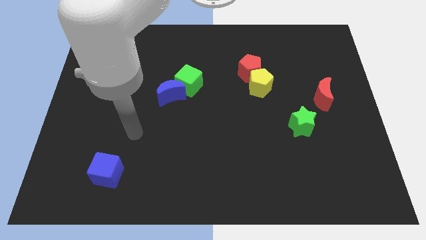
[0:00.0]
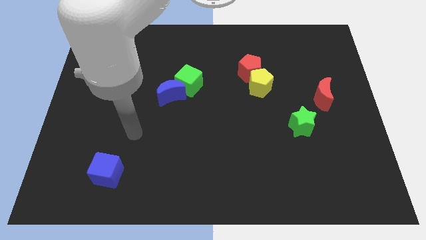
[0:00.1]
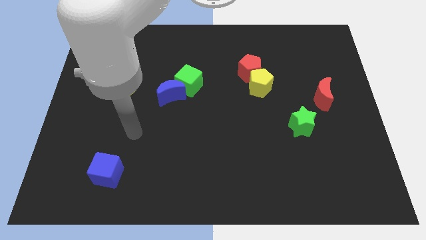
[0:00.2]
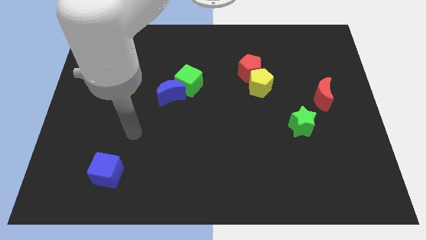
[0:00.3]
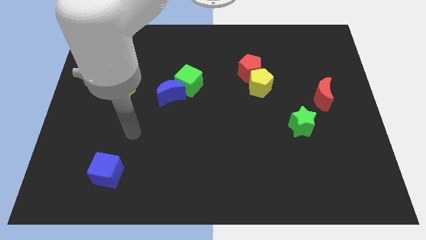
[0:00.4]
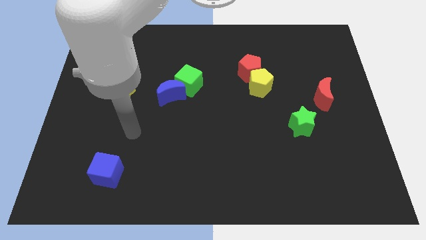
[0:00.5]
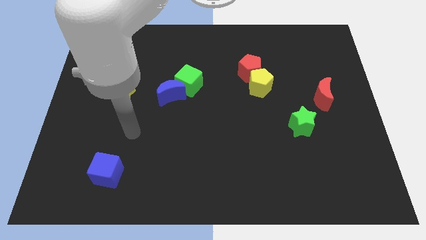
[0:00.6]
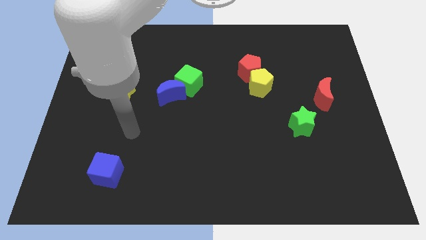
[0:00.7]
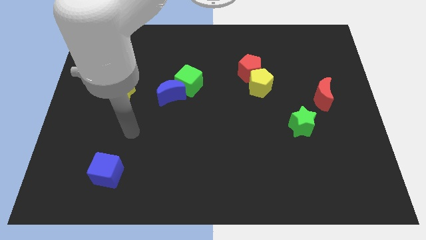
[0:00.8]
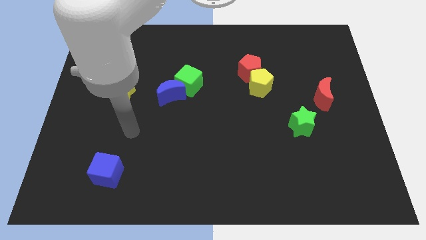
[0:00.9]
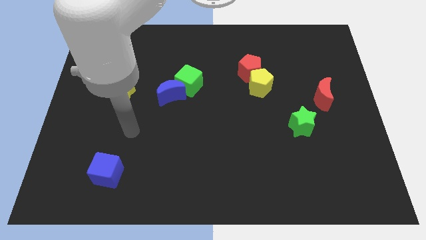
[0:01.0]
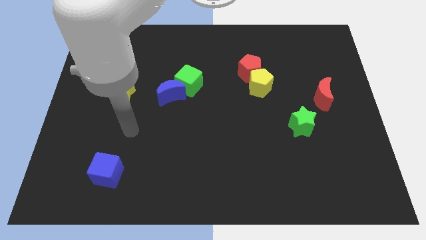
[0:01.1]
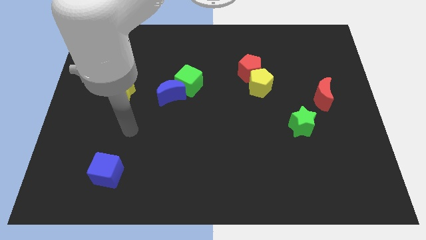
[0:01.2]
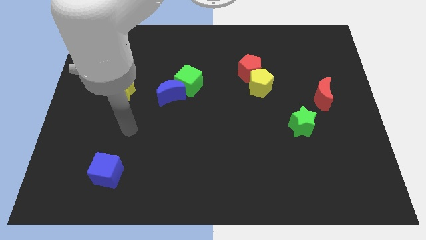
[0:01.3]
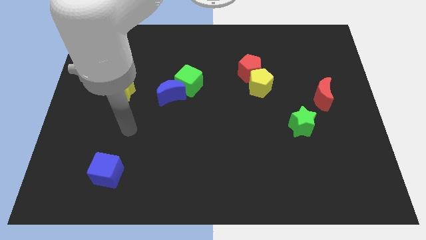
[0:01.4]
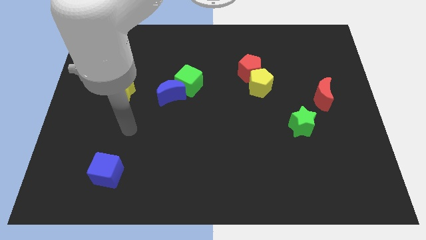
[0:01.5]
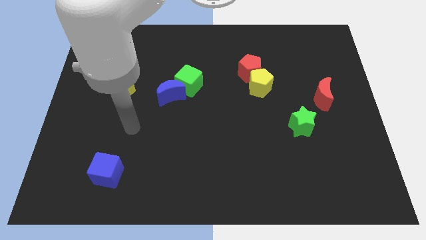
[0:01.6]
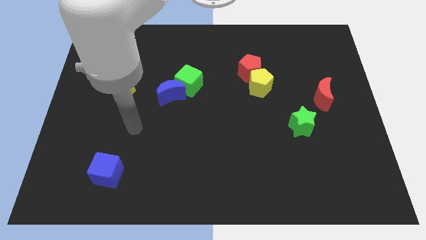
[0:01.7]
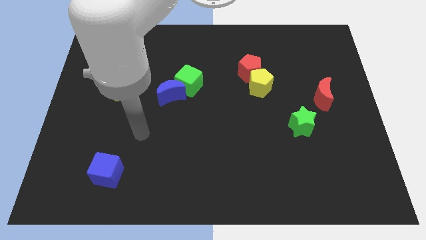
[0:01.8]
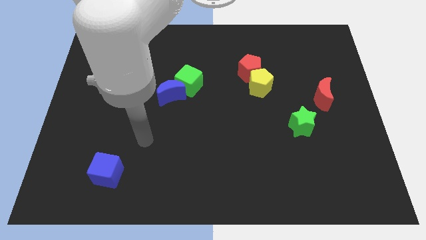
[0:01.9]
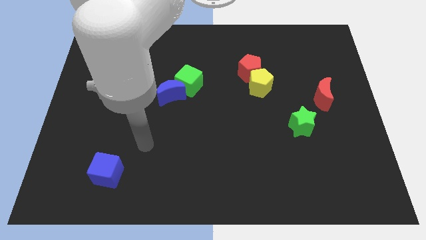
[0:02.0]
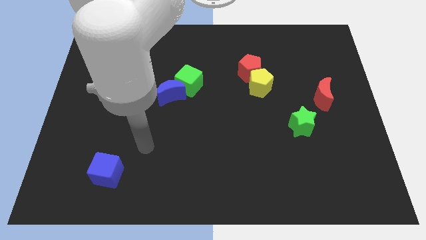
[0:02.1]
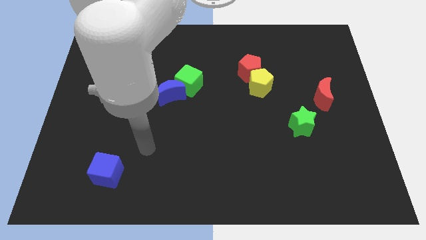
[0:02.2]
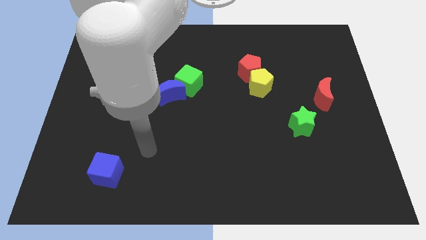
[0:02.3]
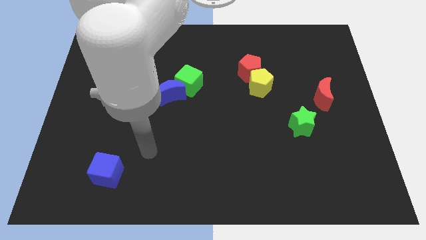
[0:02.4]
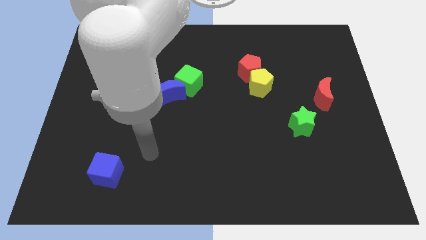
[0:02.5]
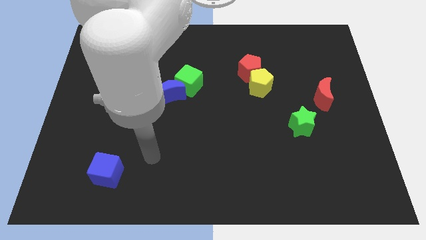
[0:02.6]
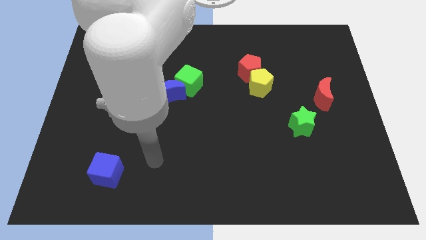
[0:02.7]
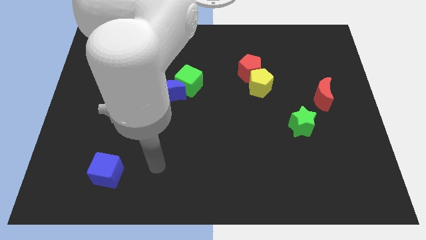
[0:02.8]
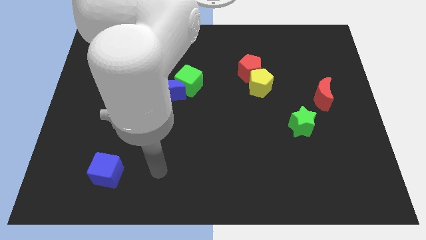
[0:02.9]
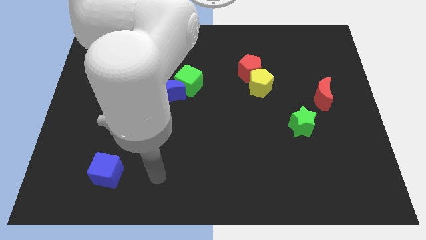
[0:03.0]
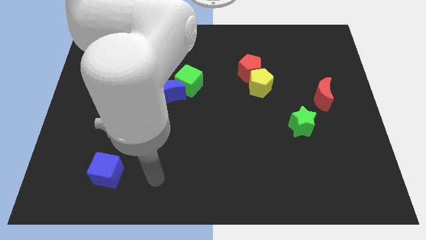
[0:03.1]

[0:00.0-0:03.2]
place your hand parallel right to the blue cube

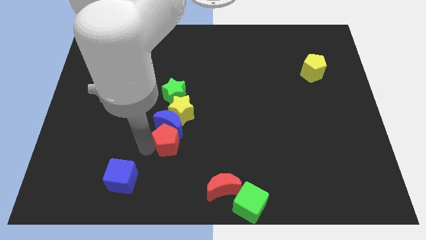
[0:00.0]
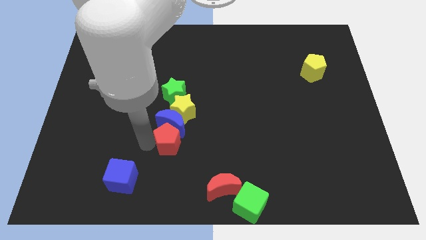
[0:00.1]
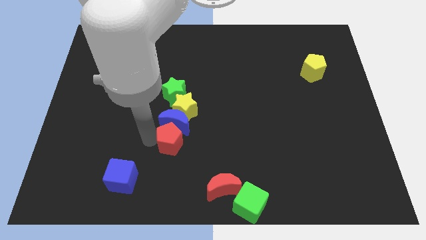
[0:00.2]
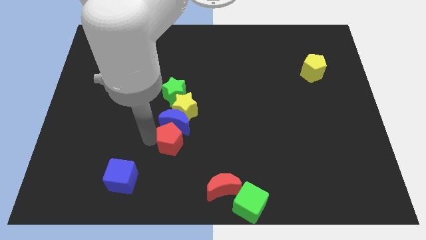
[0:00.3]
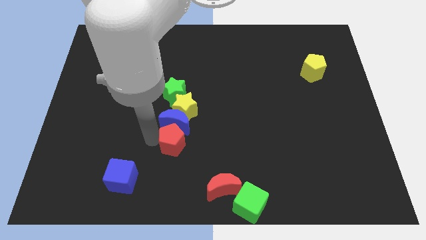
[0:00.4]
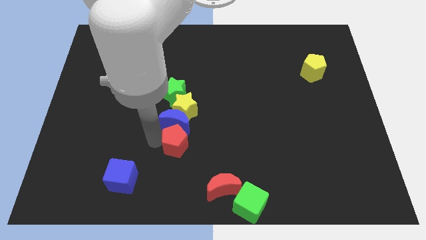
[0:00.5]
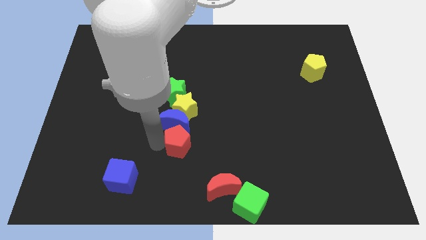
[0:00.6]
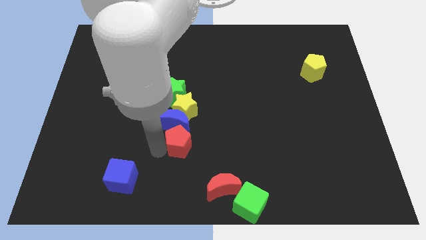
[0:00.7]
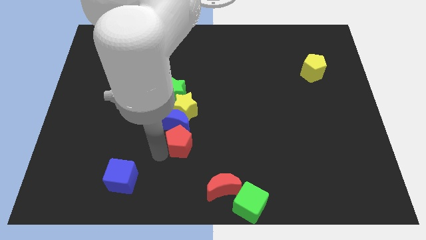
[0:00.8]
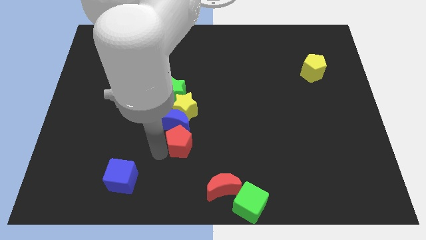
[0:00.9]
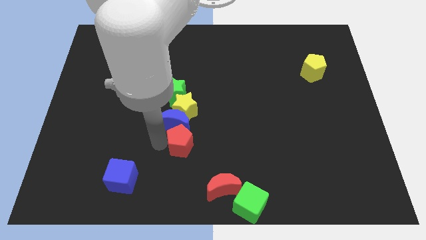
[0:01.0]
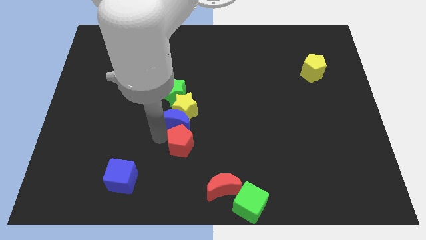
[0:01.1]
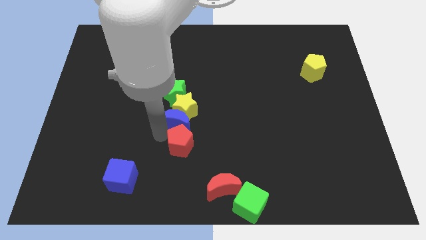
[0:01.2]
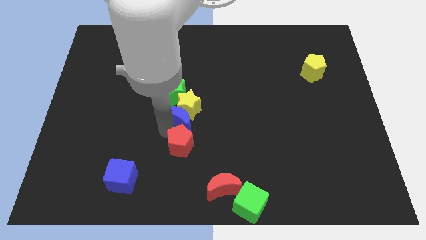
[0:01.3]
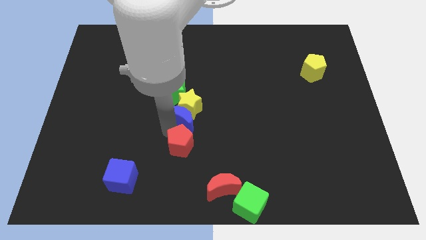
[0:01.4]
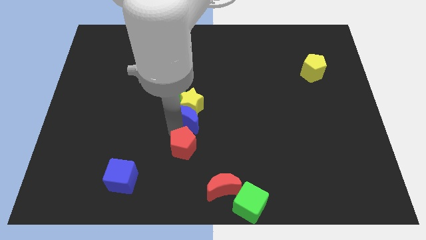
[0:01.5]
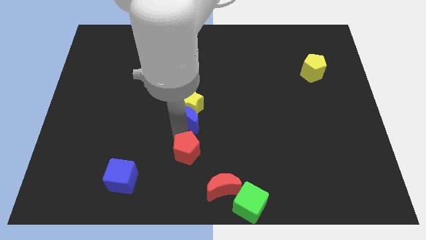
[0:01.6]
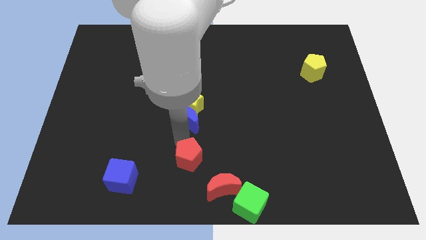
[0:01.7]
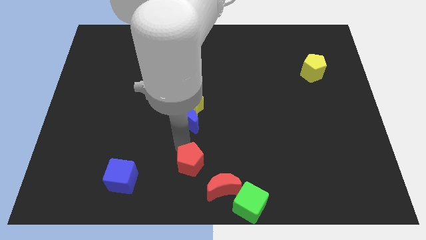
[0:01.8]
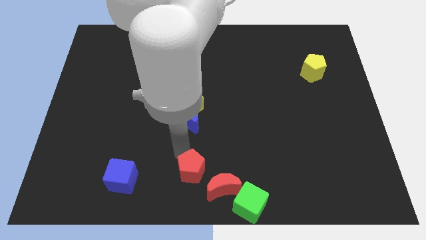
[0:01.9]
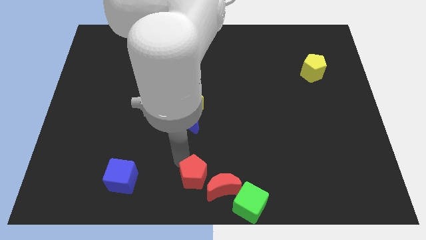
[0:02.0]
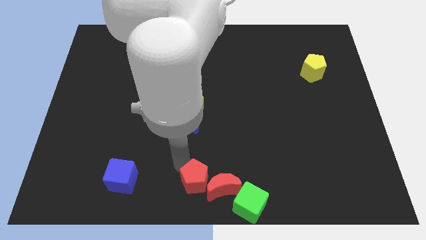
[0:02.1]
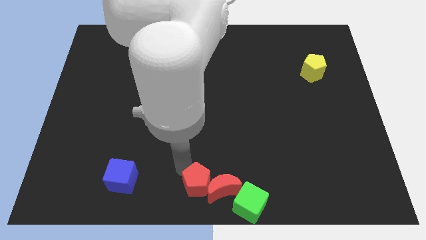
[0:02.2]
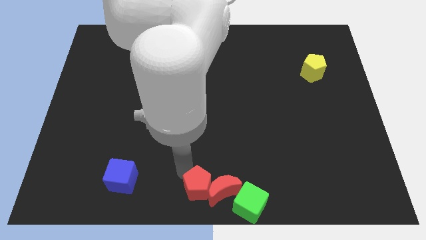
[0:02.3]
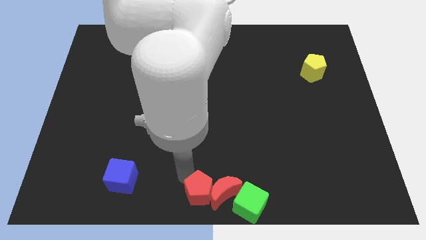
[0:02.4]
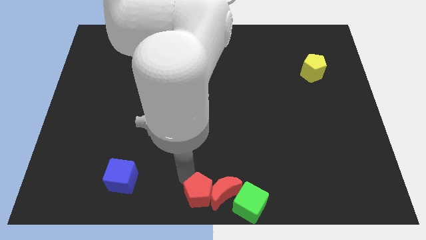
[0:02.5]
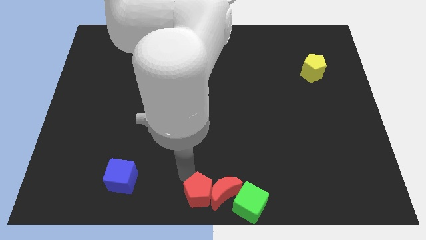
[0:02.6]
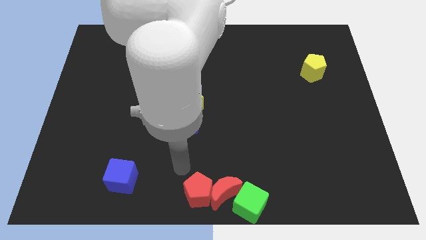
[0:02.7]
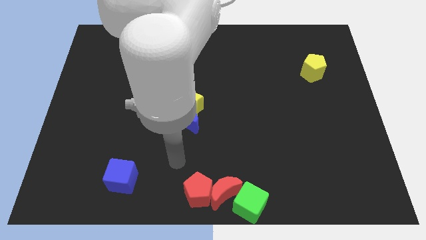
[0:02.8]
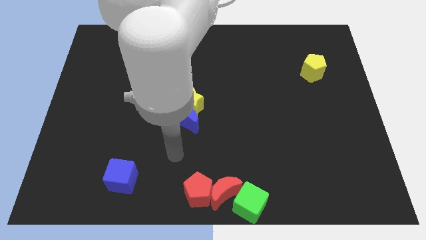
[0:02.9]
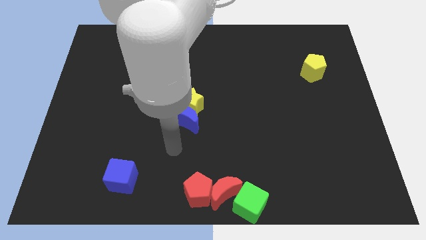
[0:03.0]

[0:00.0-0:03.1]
push the red pentagon to the left of the red crescent

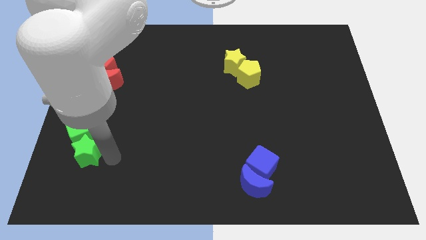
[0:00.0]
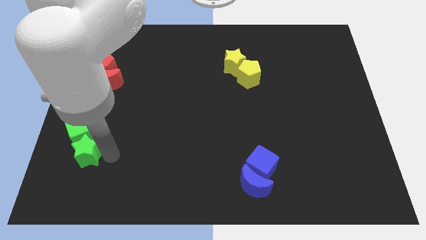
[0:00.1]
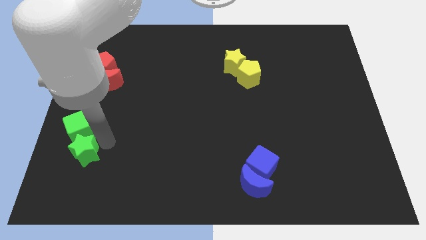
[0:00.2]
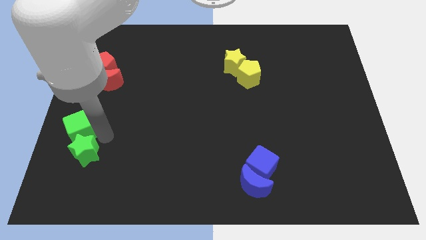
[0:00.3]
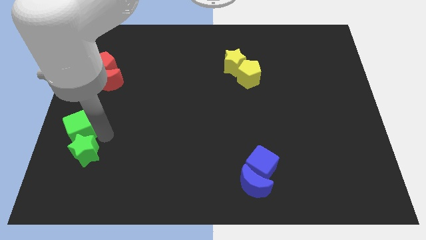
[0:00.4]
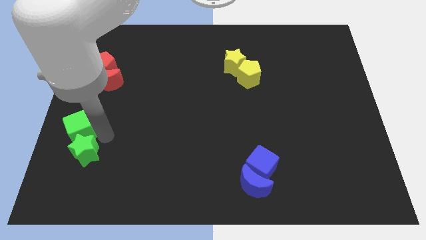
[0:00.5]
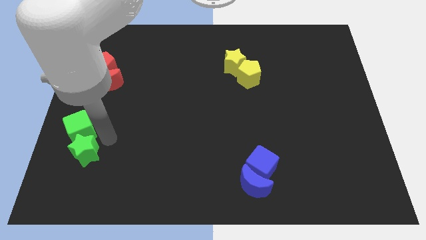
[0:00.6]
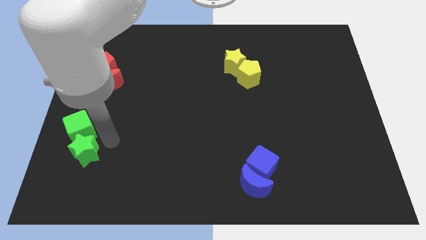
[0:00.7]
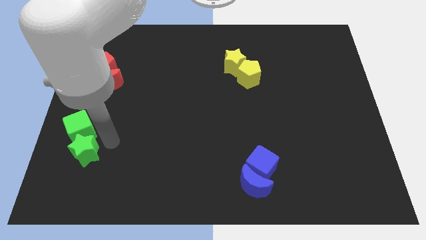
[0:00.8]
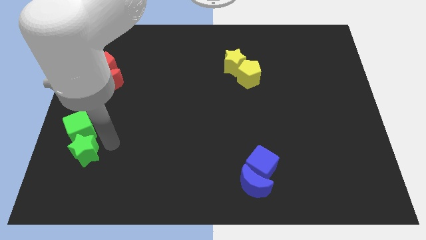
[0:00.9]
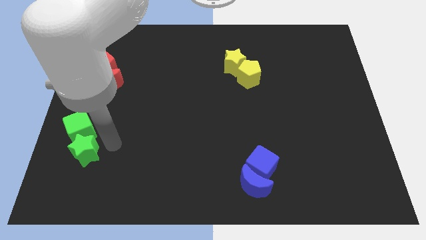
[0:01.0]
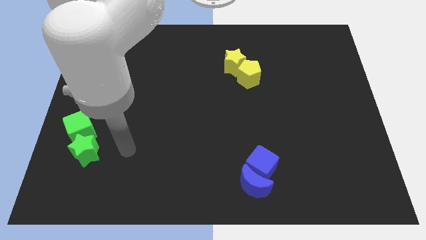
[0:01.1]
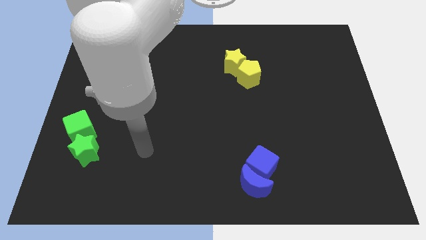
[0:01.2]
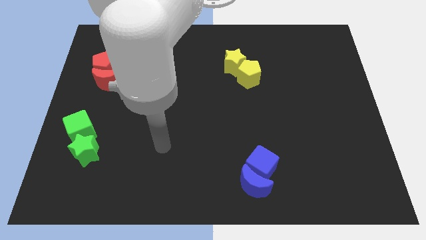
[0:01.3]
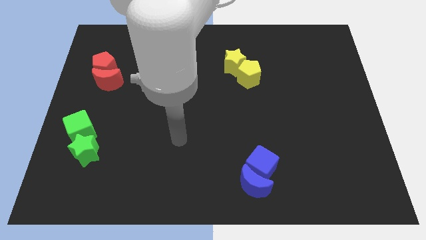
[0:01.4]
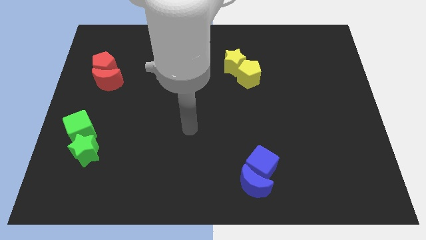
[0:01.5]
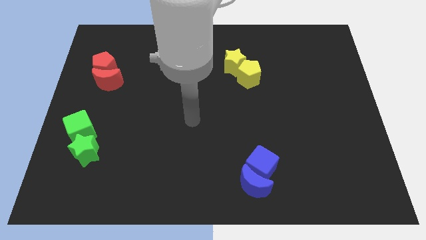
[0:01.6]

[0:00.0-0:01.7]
move your arm to the center

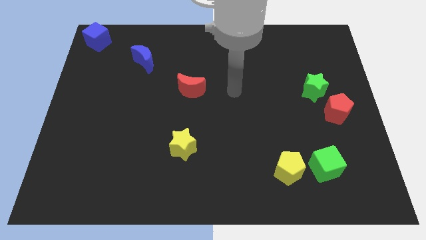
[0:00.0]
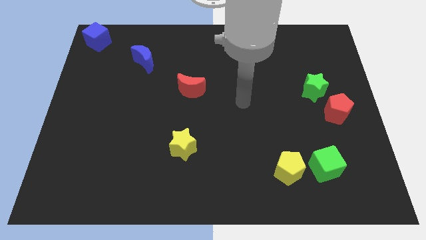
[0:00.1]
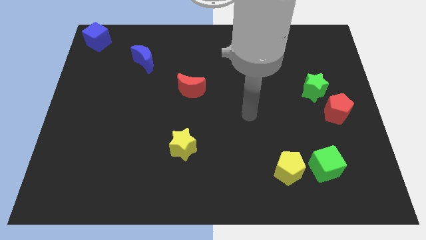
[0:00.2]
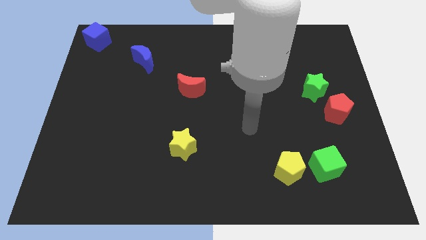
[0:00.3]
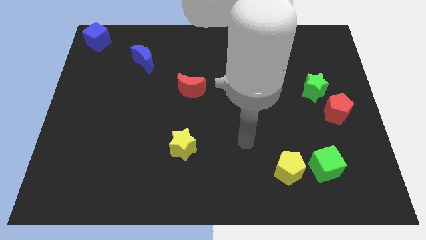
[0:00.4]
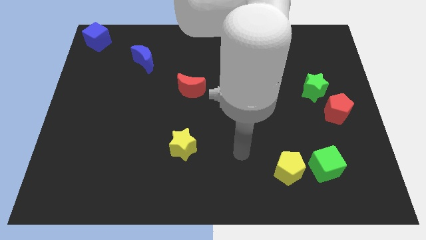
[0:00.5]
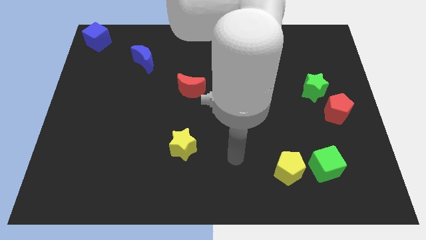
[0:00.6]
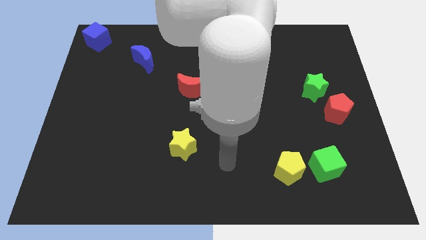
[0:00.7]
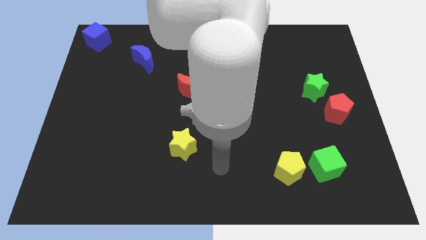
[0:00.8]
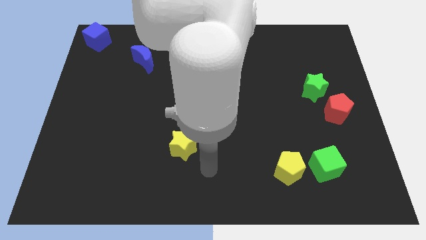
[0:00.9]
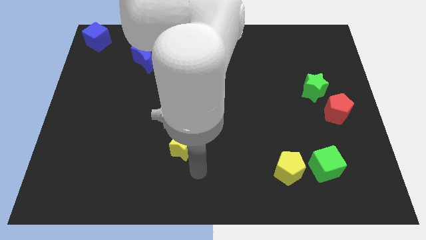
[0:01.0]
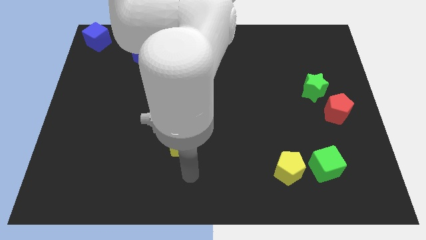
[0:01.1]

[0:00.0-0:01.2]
move the arm under yellow star
